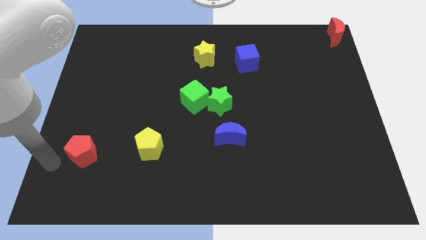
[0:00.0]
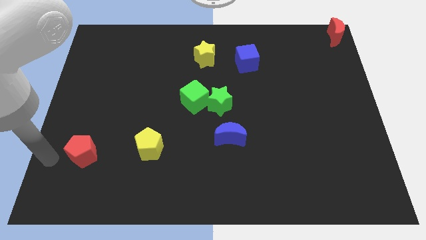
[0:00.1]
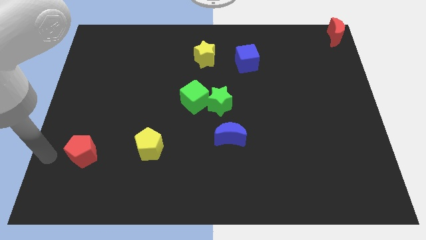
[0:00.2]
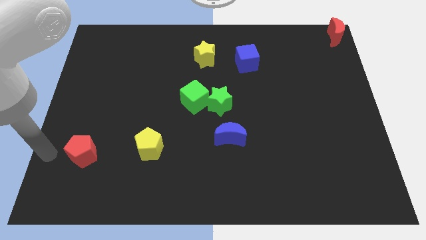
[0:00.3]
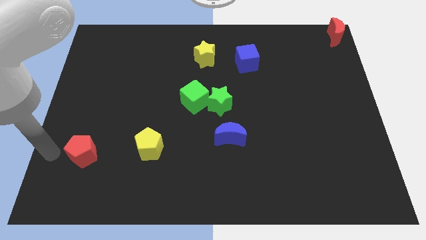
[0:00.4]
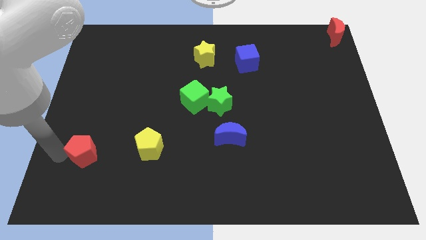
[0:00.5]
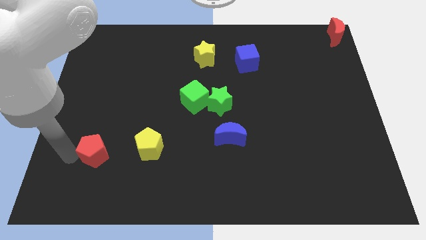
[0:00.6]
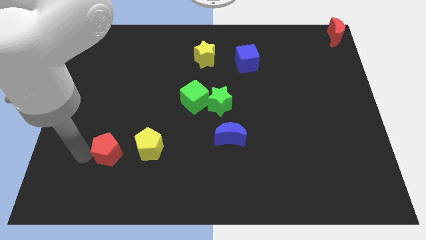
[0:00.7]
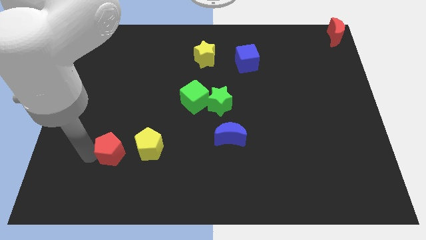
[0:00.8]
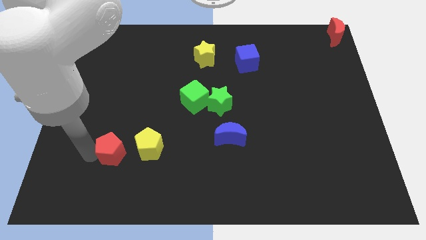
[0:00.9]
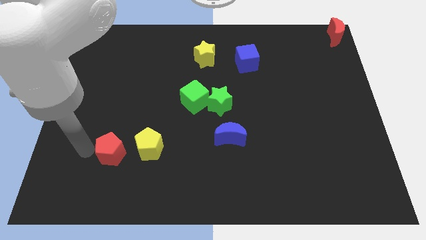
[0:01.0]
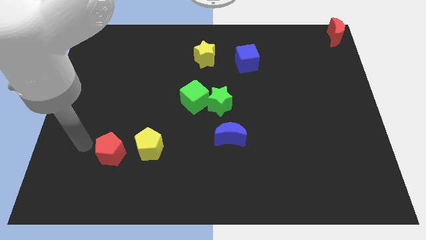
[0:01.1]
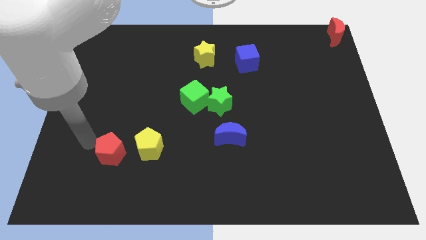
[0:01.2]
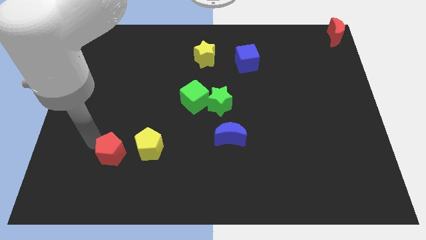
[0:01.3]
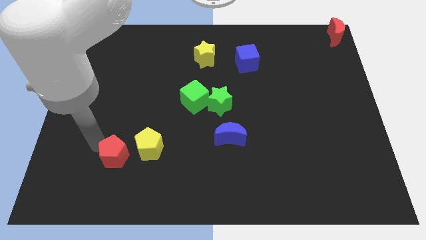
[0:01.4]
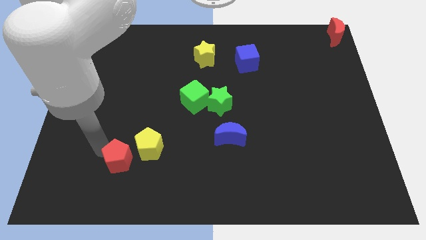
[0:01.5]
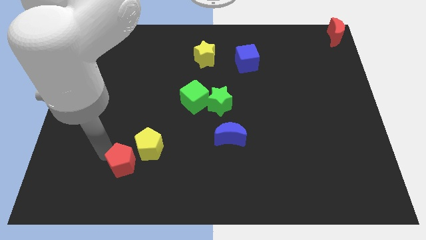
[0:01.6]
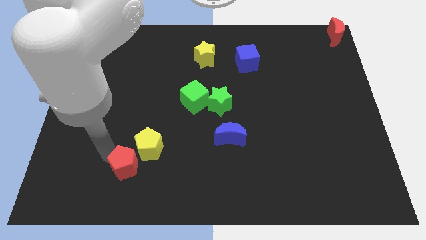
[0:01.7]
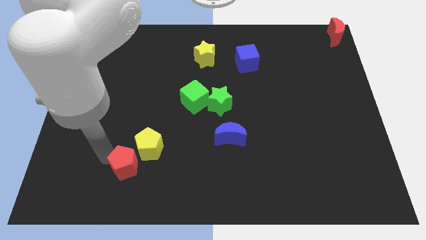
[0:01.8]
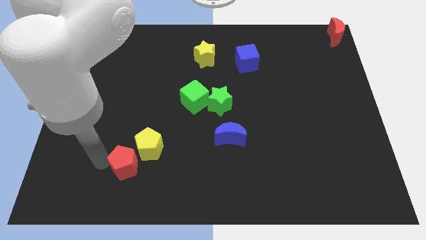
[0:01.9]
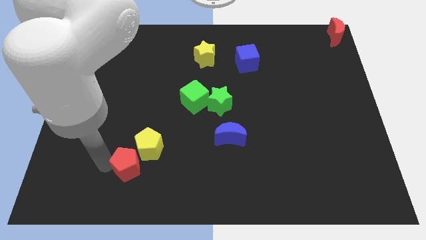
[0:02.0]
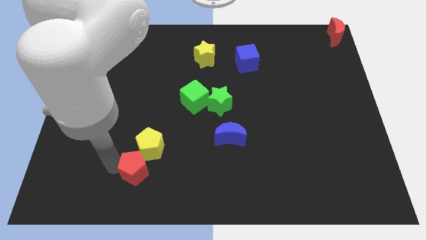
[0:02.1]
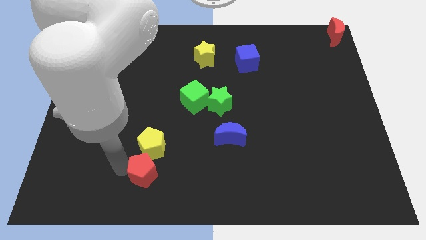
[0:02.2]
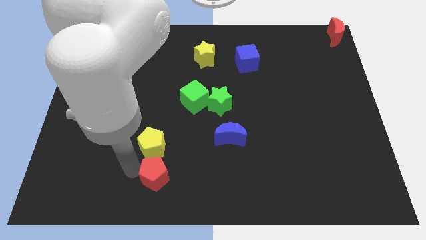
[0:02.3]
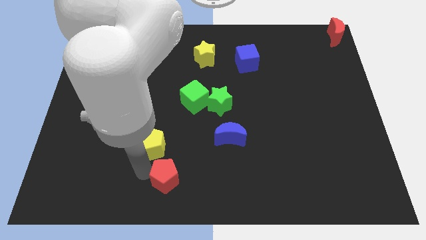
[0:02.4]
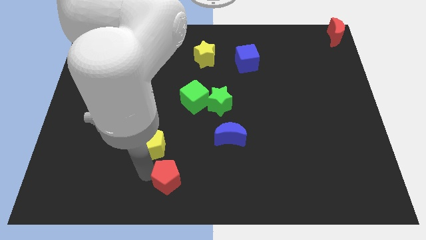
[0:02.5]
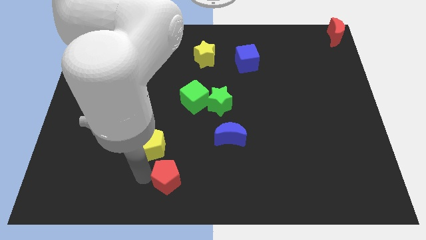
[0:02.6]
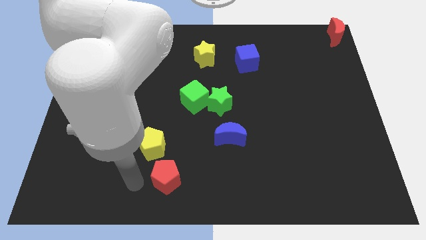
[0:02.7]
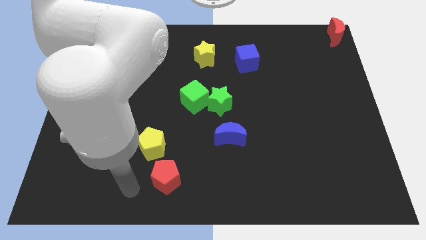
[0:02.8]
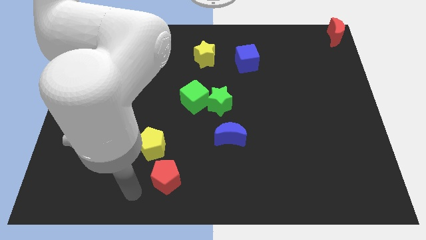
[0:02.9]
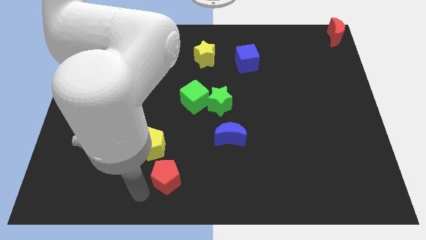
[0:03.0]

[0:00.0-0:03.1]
push red pentagon below yellow pentagon

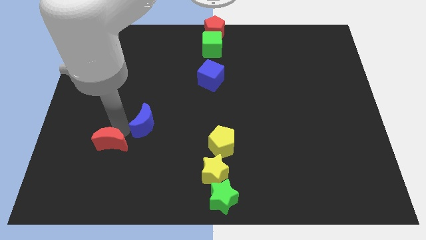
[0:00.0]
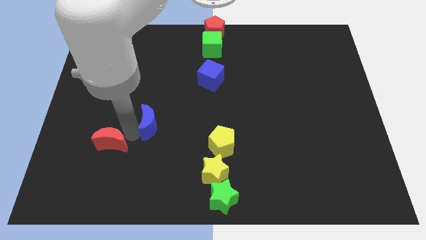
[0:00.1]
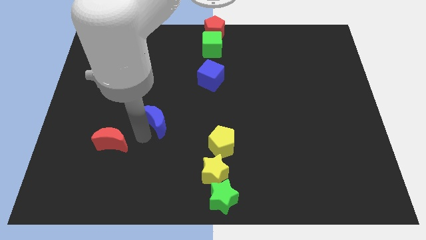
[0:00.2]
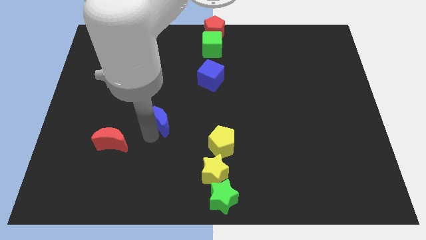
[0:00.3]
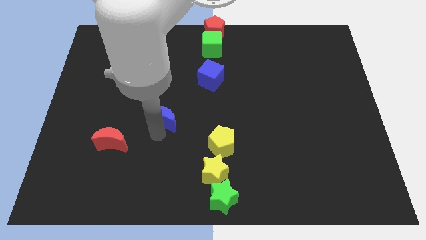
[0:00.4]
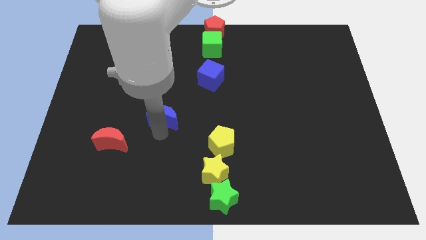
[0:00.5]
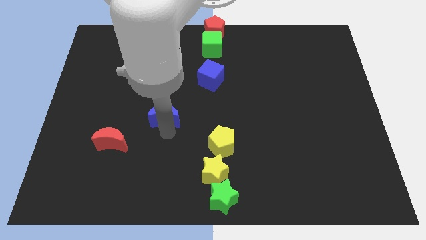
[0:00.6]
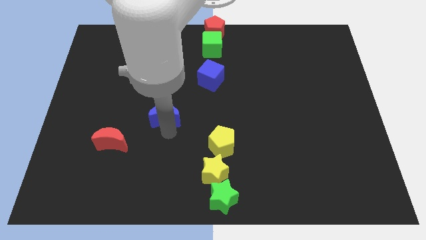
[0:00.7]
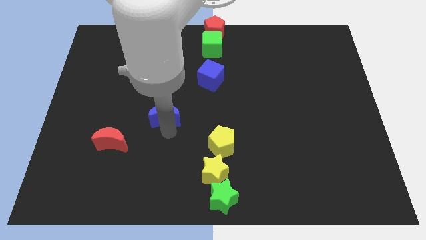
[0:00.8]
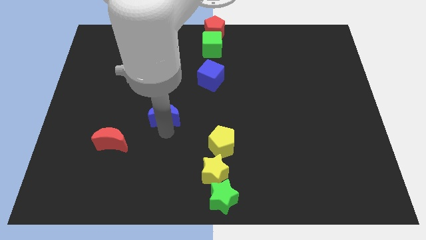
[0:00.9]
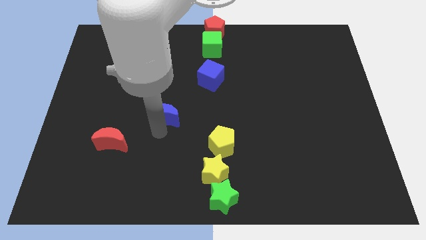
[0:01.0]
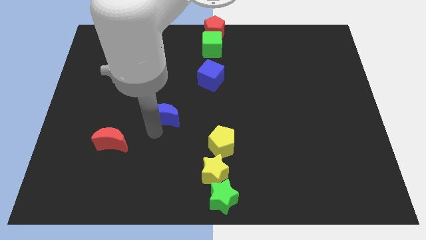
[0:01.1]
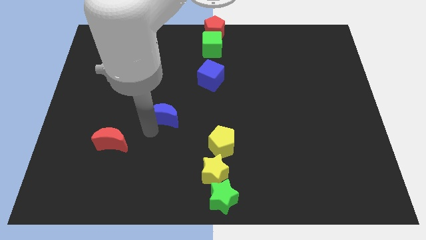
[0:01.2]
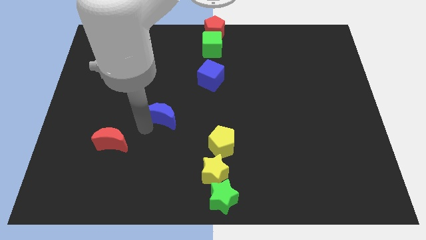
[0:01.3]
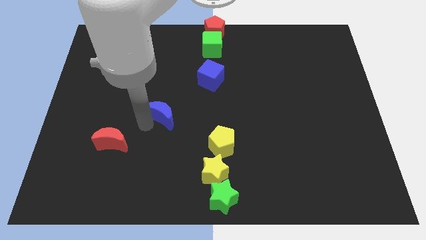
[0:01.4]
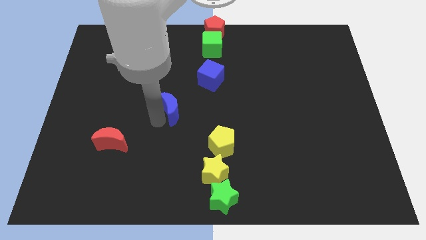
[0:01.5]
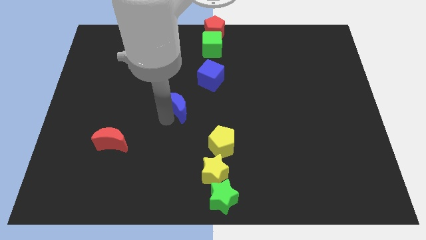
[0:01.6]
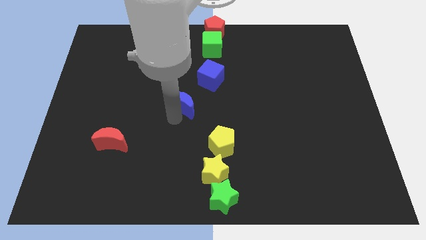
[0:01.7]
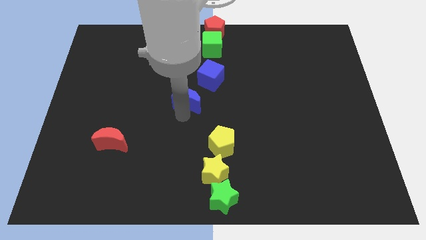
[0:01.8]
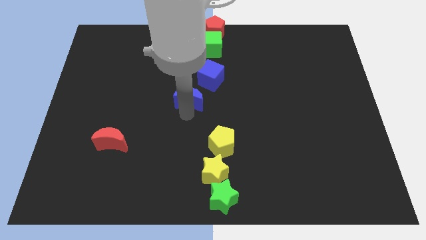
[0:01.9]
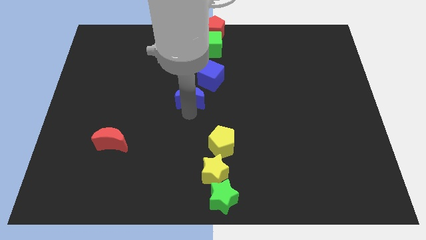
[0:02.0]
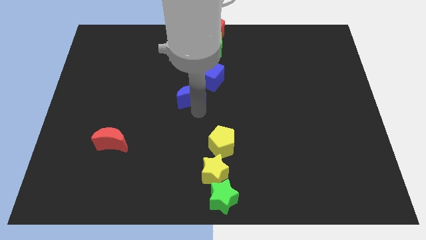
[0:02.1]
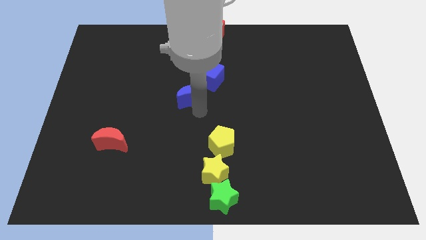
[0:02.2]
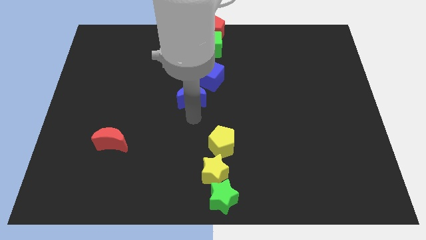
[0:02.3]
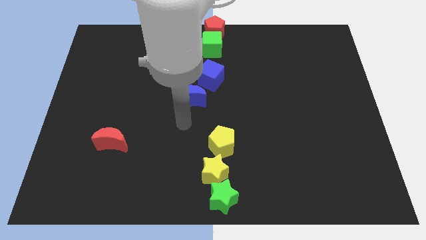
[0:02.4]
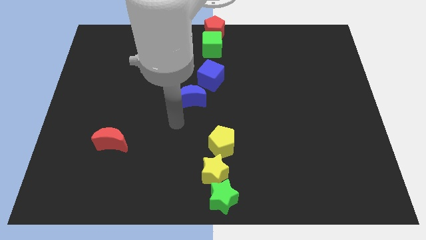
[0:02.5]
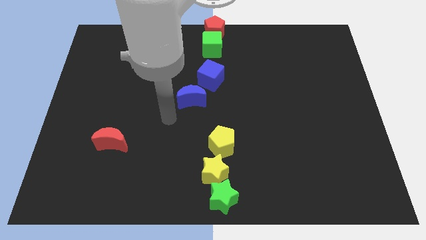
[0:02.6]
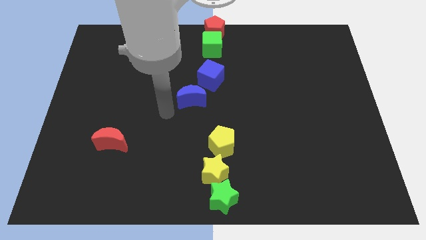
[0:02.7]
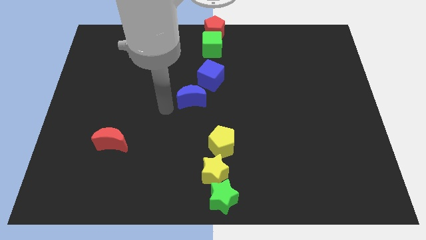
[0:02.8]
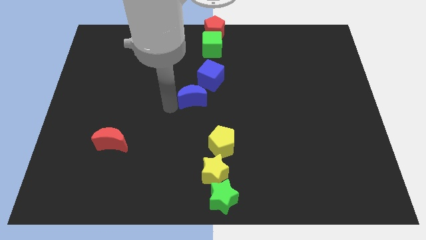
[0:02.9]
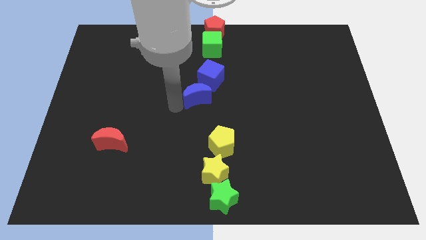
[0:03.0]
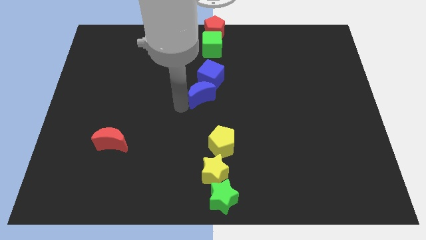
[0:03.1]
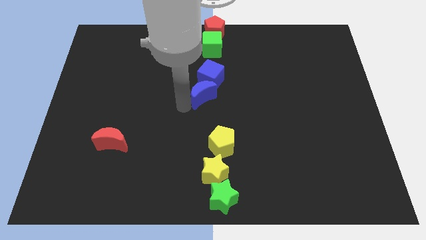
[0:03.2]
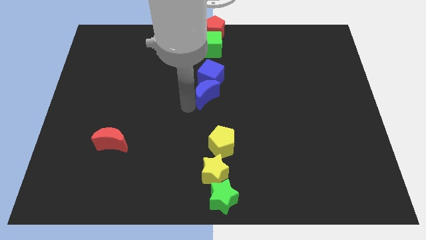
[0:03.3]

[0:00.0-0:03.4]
place the blue crescent below the blue cube

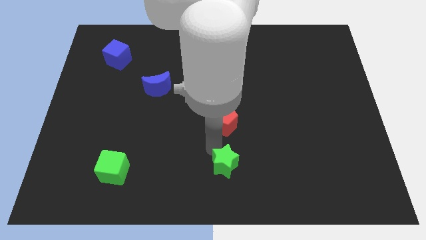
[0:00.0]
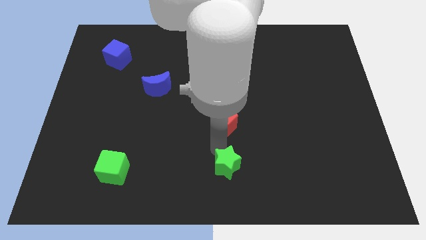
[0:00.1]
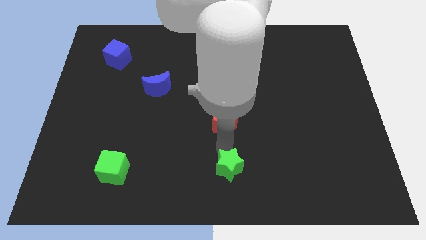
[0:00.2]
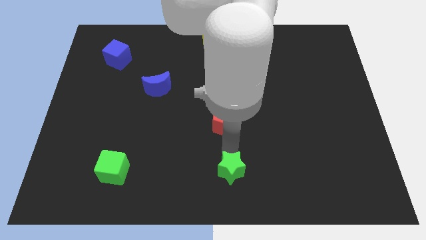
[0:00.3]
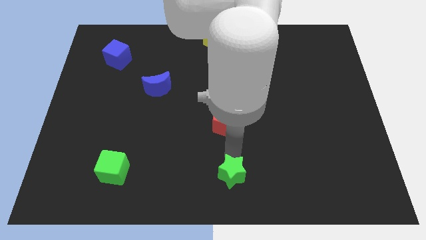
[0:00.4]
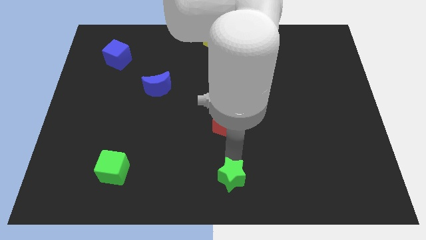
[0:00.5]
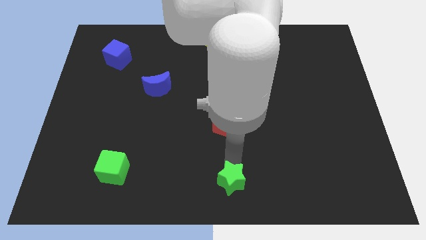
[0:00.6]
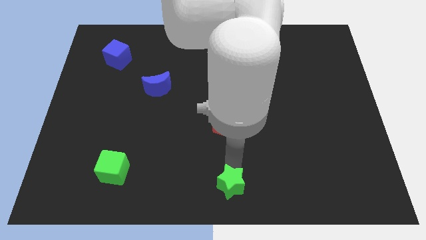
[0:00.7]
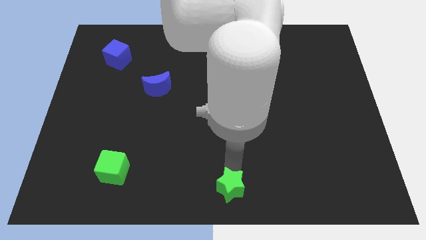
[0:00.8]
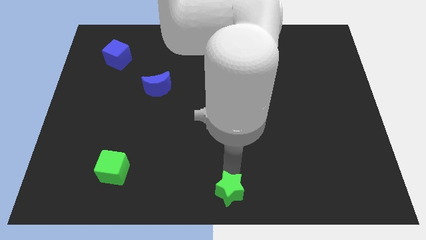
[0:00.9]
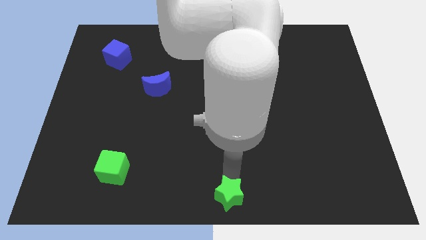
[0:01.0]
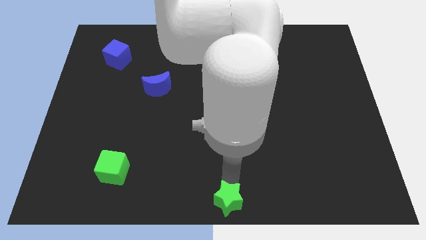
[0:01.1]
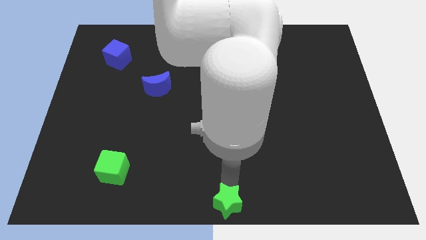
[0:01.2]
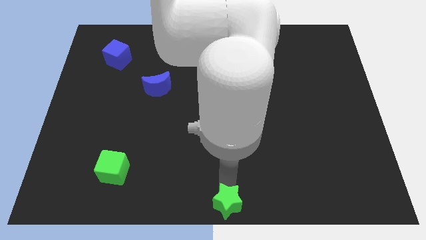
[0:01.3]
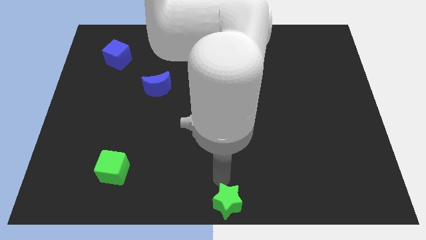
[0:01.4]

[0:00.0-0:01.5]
move the green star to the bottom center of the board

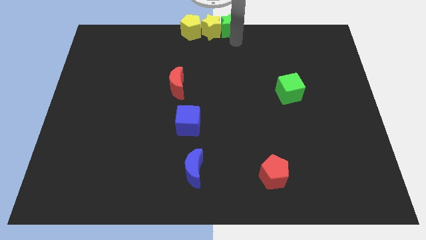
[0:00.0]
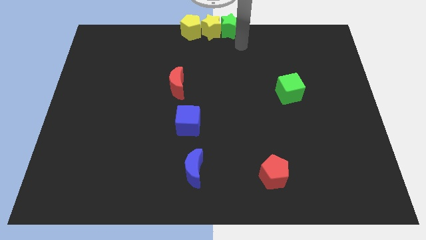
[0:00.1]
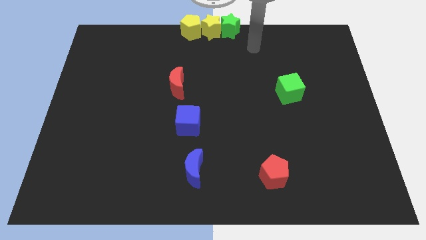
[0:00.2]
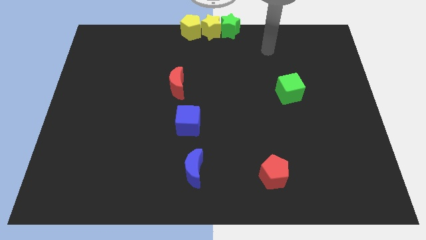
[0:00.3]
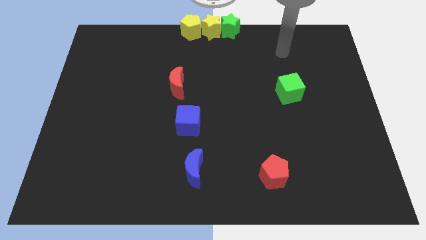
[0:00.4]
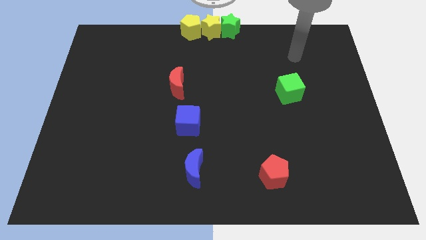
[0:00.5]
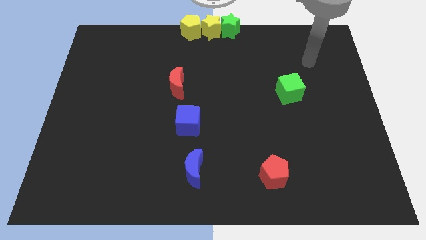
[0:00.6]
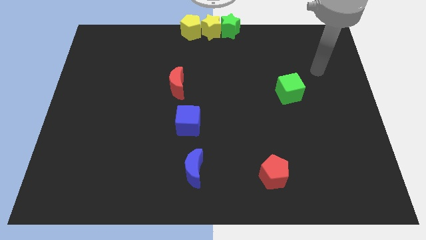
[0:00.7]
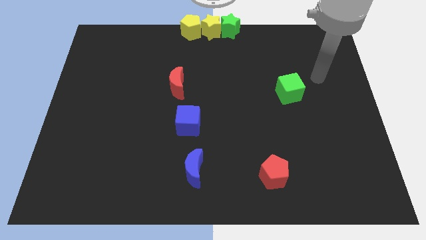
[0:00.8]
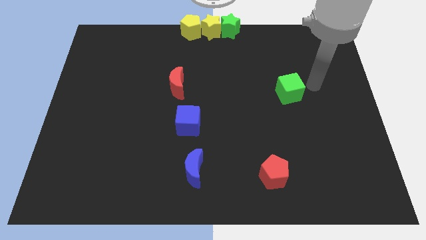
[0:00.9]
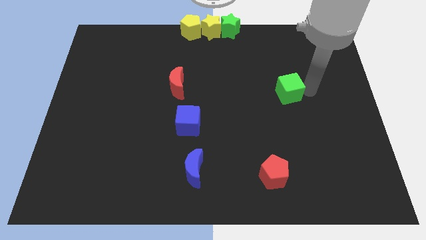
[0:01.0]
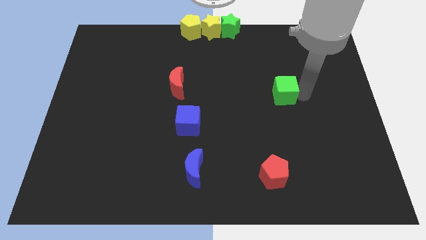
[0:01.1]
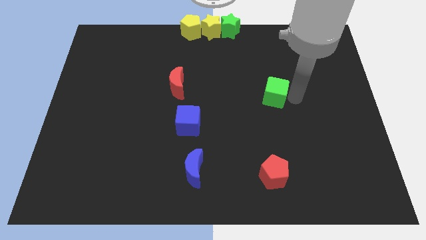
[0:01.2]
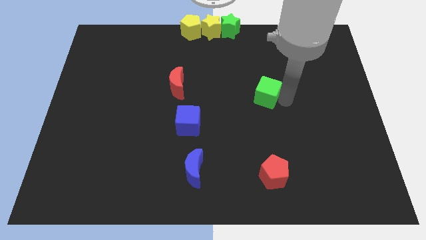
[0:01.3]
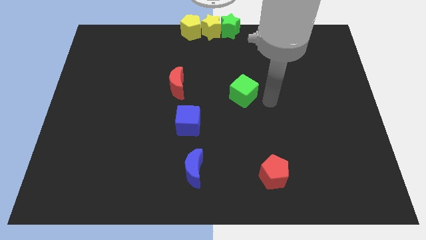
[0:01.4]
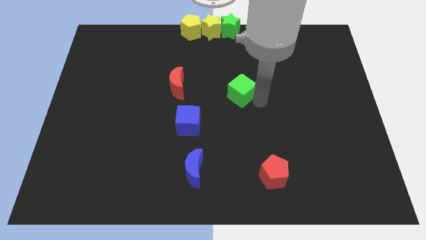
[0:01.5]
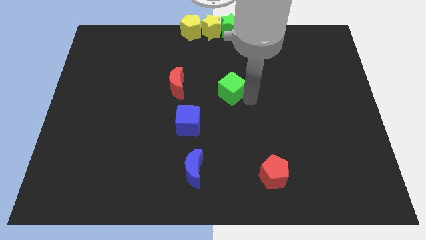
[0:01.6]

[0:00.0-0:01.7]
push the green cube towards the left side
